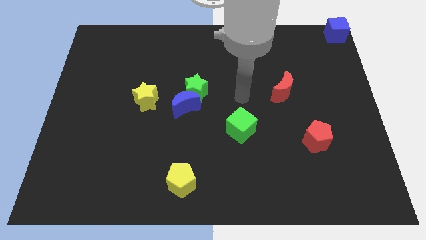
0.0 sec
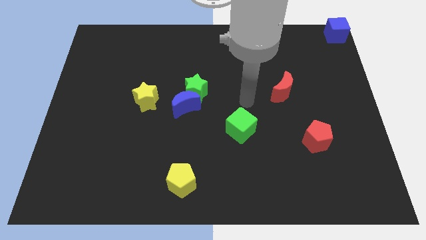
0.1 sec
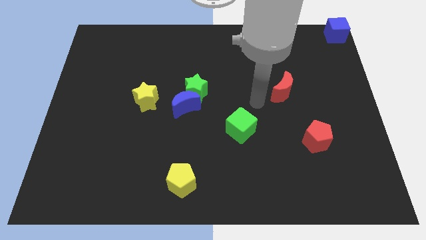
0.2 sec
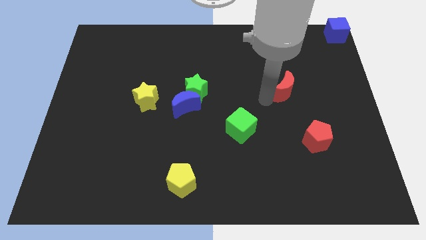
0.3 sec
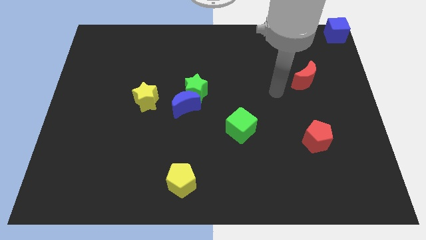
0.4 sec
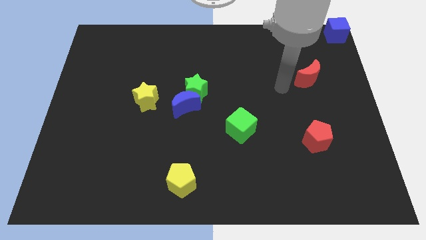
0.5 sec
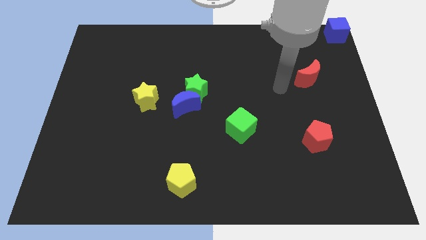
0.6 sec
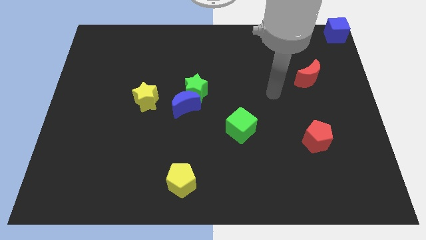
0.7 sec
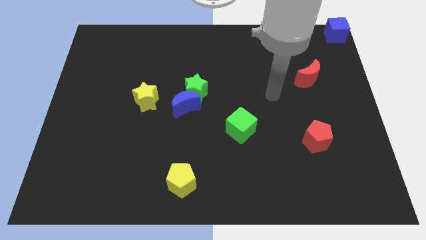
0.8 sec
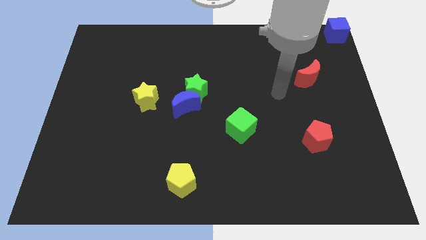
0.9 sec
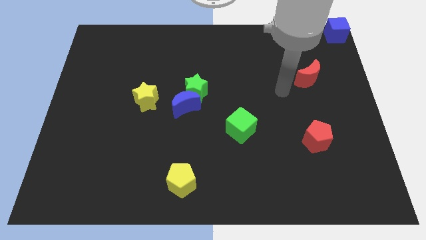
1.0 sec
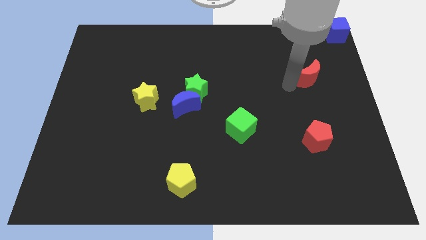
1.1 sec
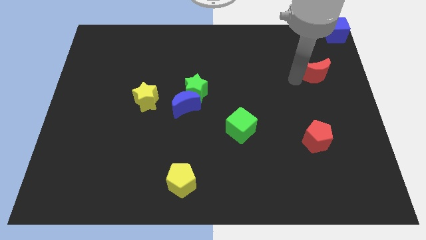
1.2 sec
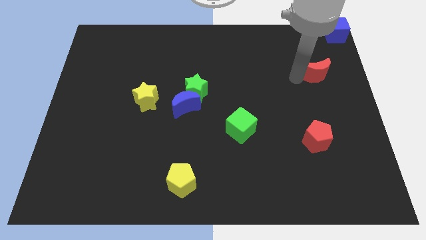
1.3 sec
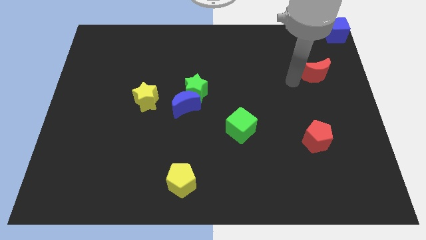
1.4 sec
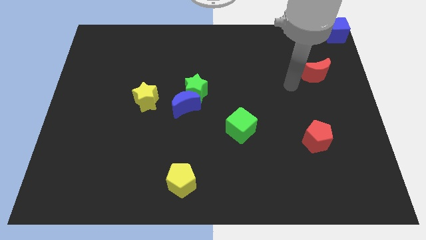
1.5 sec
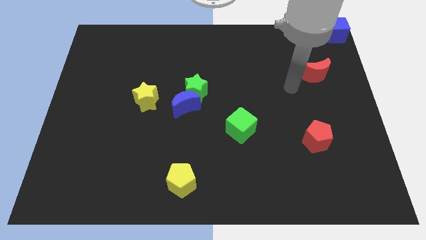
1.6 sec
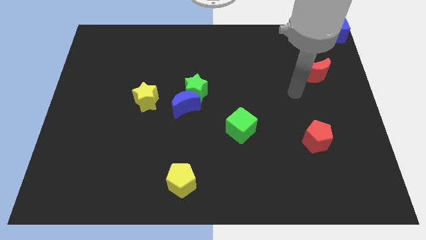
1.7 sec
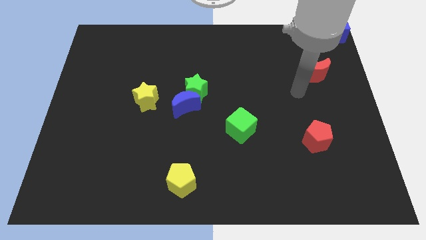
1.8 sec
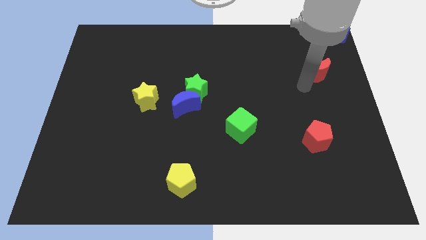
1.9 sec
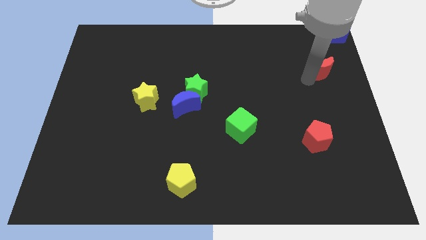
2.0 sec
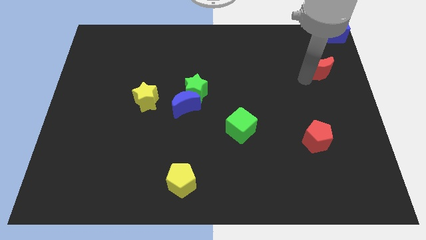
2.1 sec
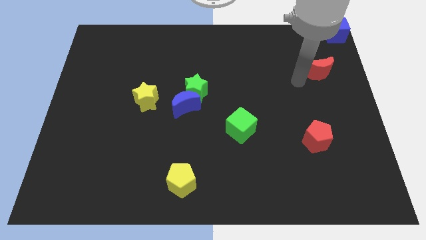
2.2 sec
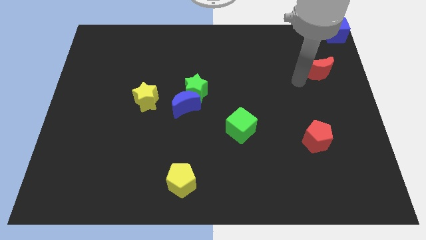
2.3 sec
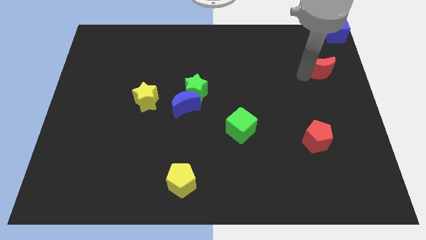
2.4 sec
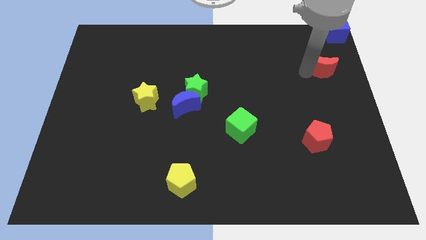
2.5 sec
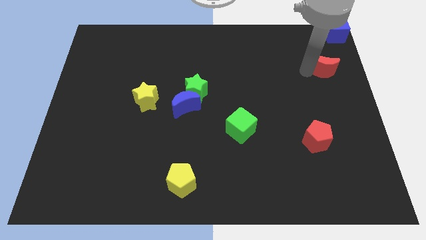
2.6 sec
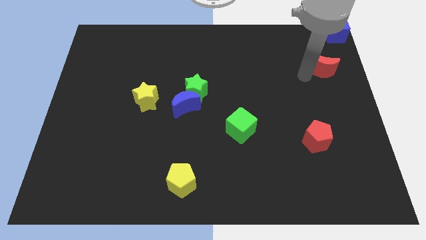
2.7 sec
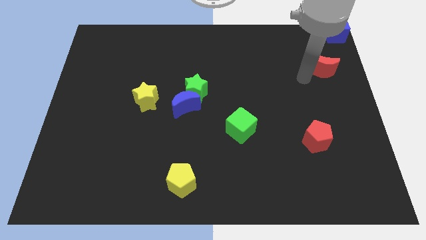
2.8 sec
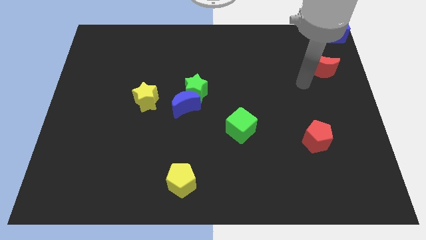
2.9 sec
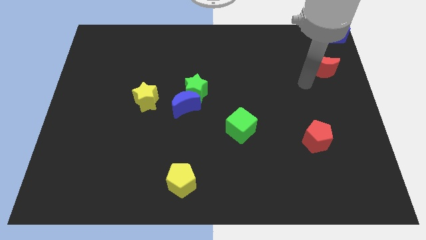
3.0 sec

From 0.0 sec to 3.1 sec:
move the red crescent above the red pentagon at the right

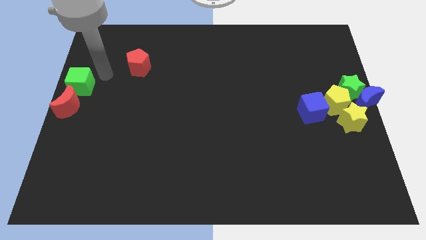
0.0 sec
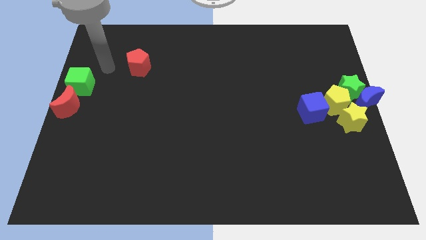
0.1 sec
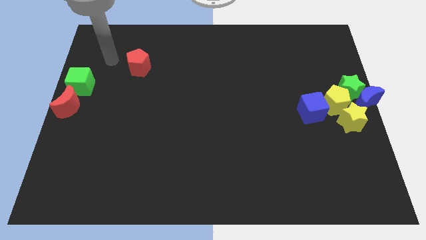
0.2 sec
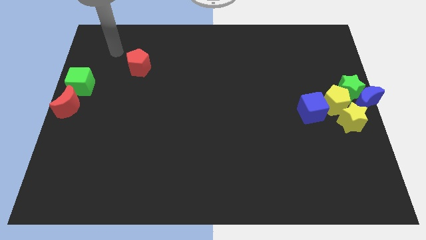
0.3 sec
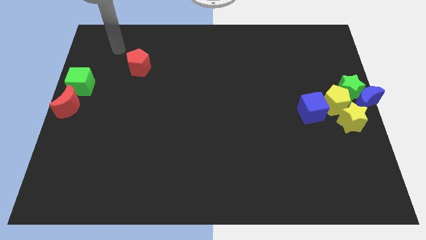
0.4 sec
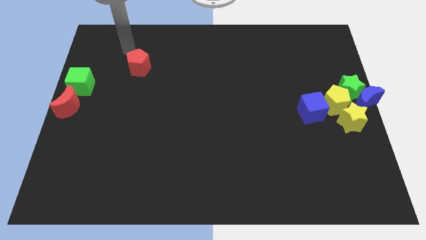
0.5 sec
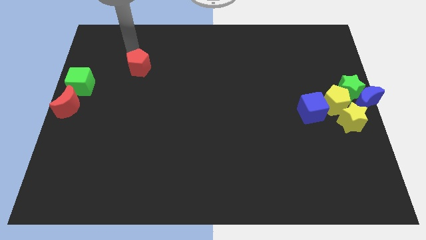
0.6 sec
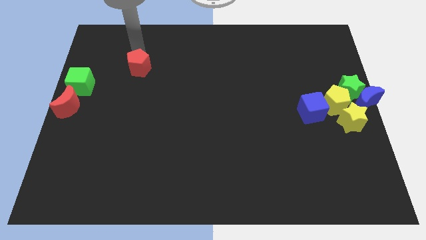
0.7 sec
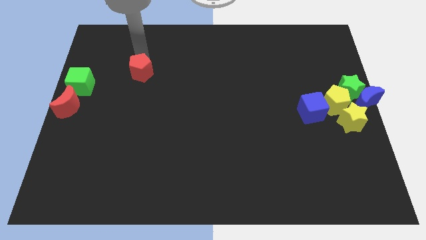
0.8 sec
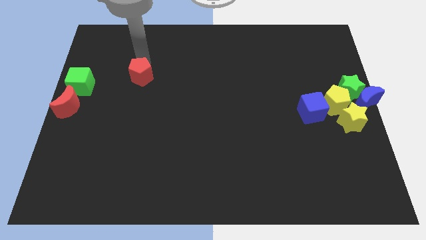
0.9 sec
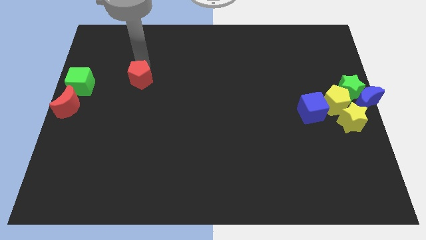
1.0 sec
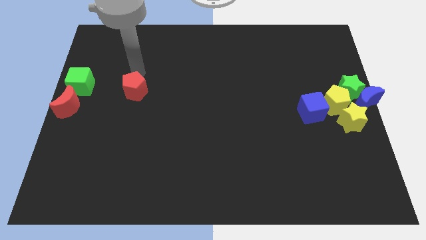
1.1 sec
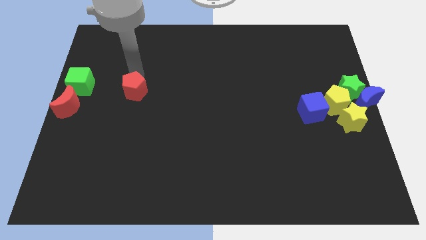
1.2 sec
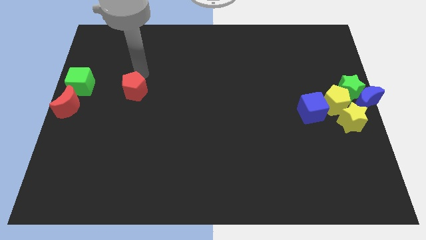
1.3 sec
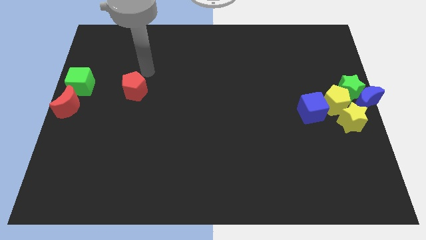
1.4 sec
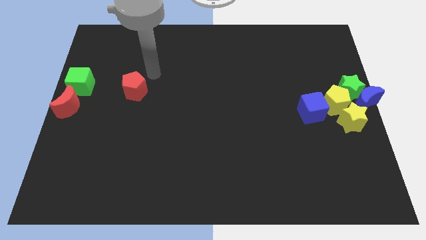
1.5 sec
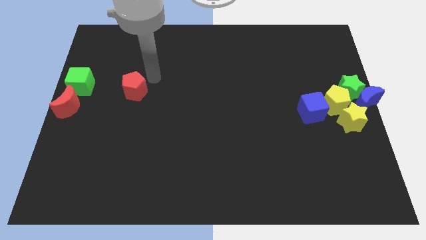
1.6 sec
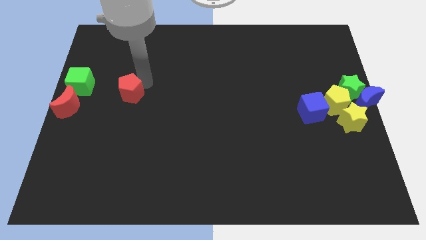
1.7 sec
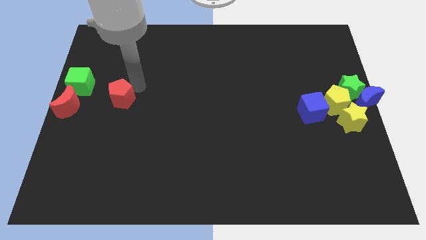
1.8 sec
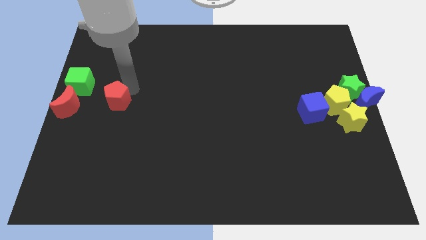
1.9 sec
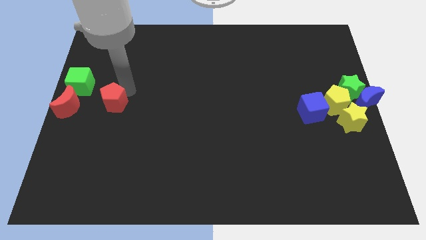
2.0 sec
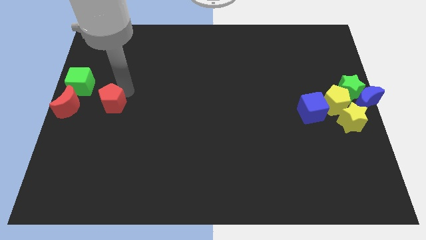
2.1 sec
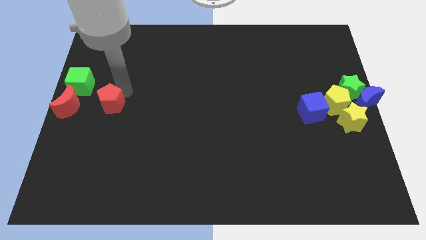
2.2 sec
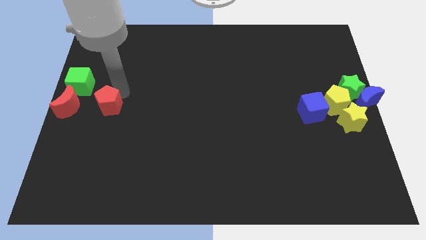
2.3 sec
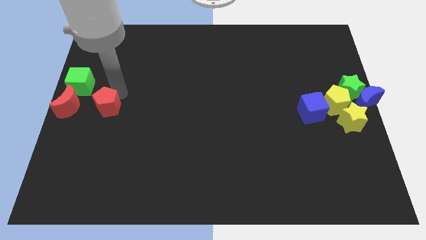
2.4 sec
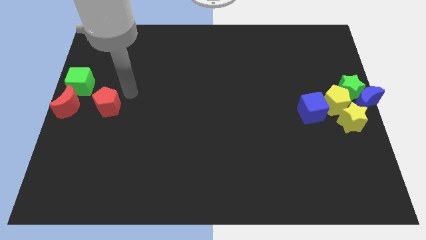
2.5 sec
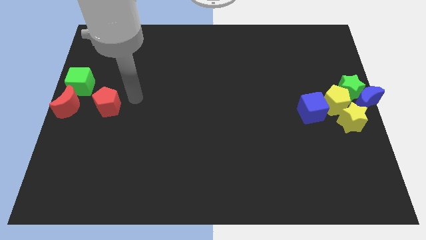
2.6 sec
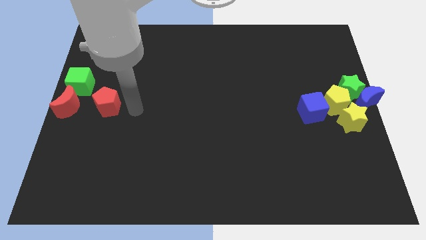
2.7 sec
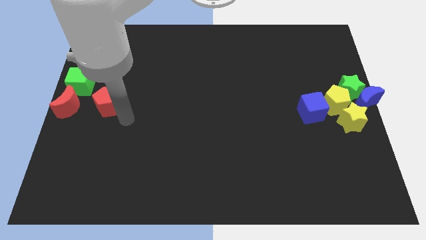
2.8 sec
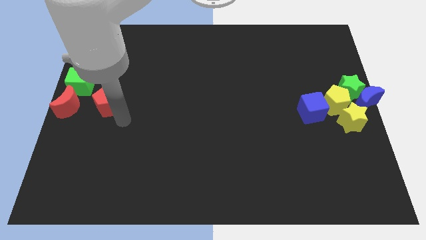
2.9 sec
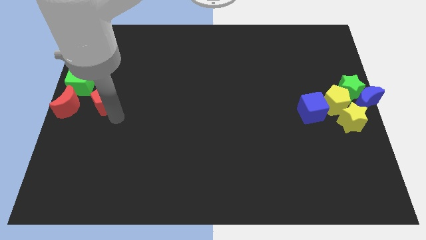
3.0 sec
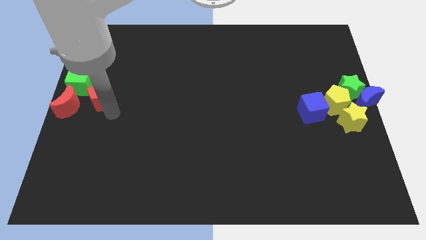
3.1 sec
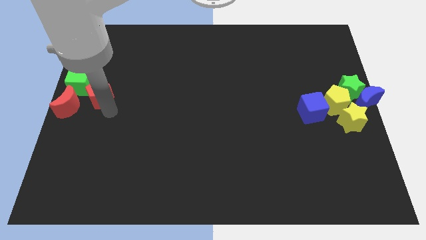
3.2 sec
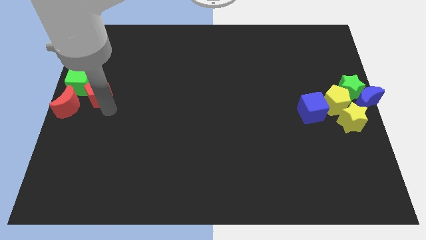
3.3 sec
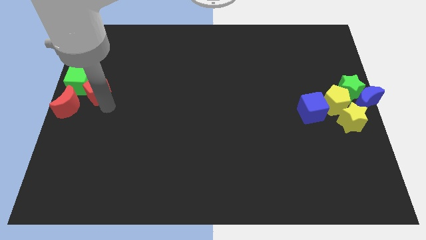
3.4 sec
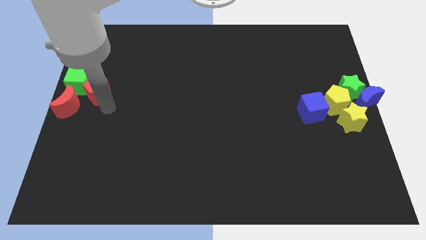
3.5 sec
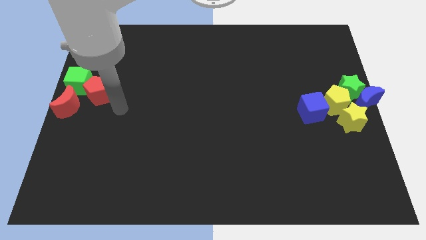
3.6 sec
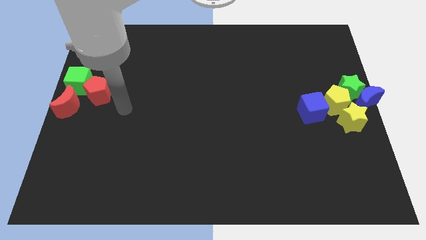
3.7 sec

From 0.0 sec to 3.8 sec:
move red pentagon beside green cube

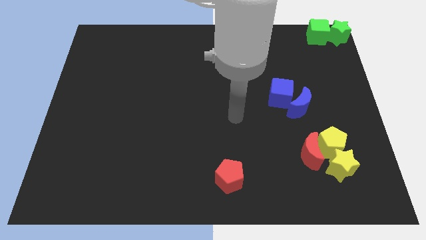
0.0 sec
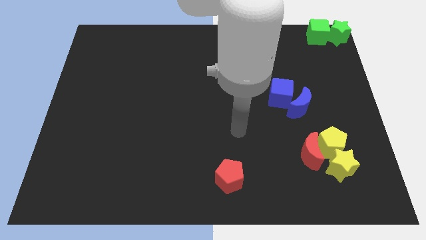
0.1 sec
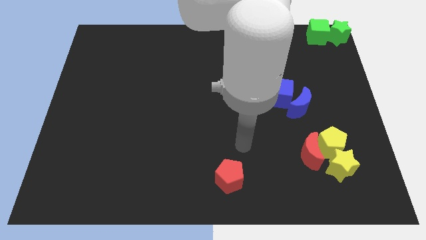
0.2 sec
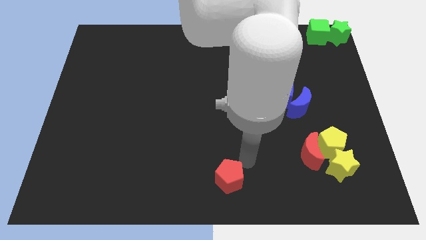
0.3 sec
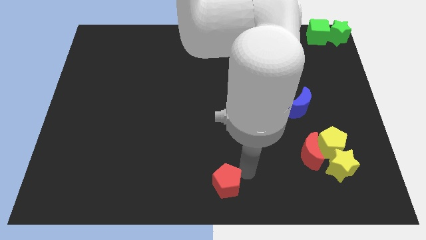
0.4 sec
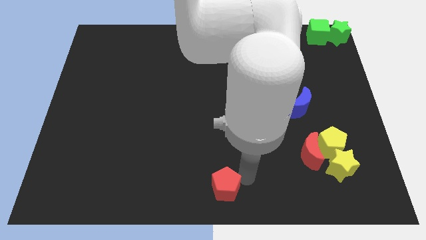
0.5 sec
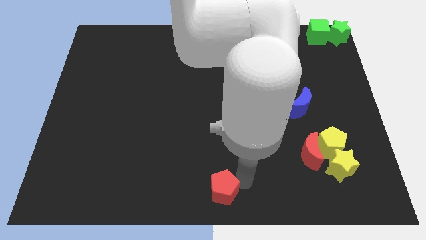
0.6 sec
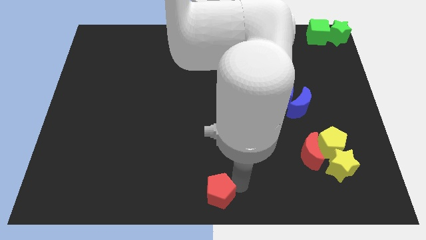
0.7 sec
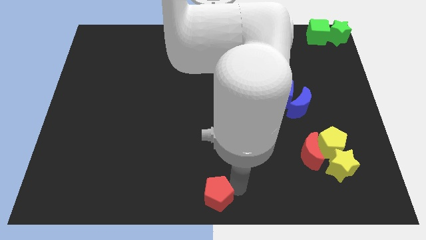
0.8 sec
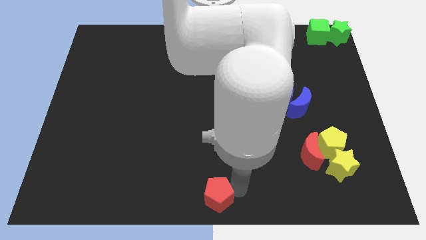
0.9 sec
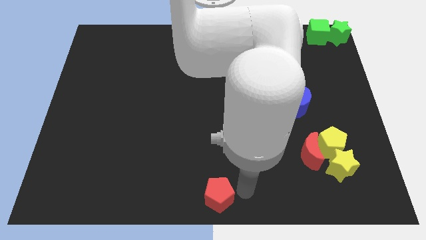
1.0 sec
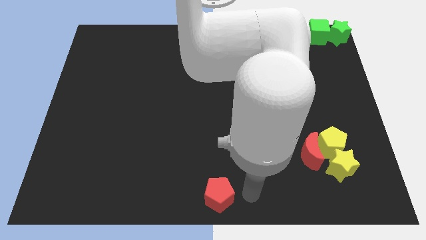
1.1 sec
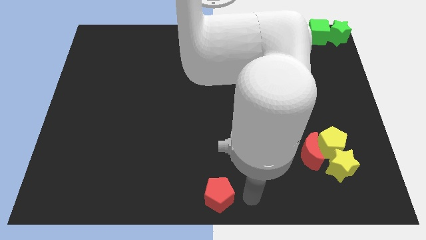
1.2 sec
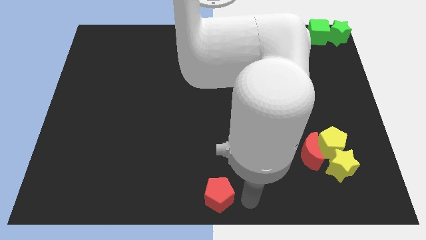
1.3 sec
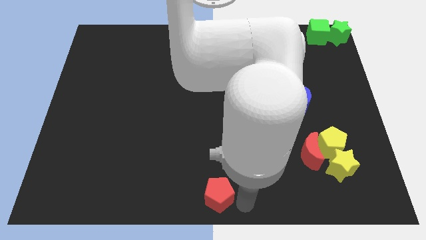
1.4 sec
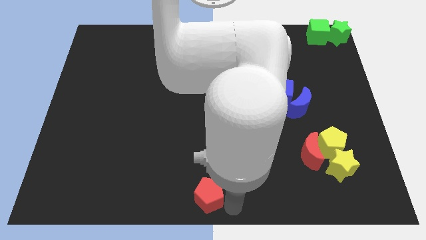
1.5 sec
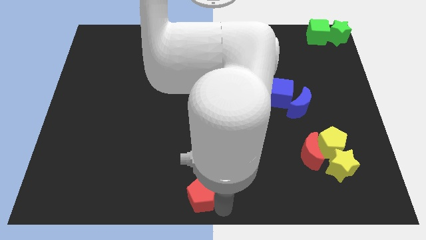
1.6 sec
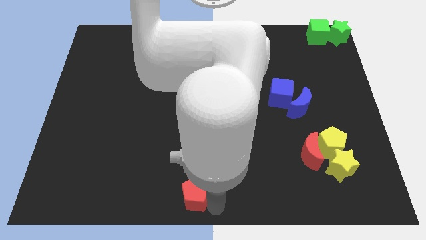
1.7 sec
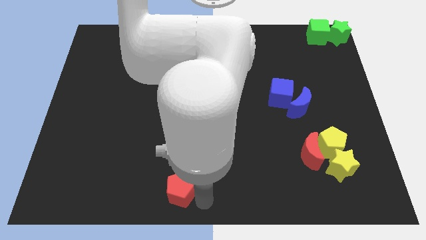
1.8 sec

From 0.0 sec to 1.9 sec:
push the red pentagon slightly to the bottom left

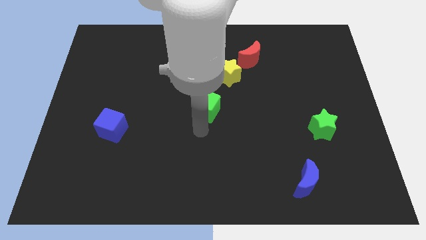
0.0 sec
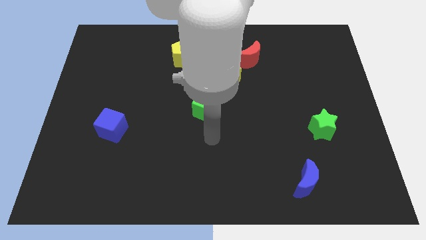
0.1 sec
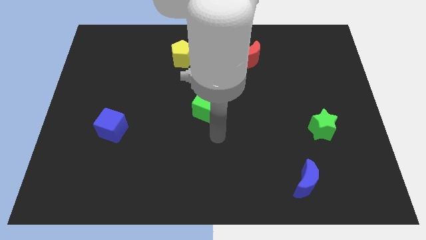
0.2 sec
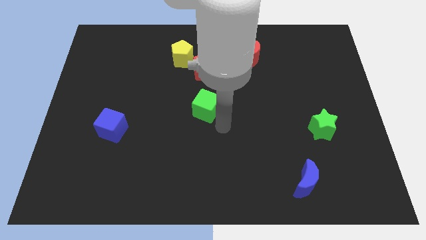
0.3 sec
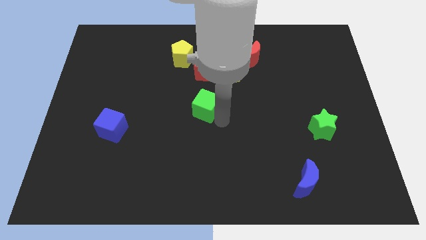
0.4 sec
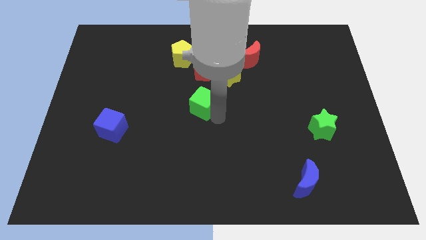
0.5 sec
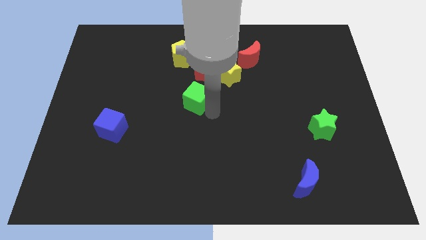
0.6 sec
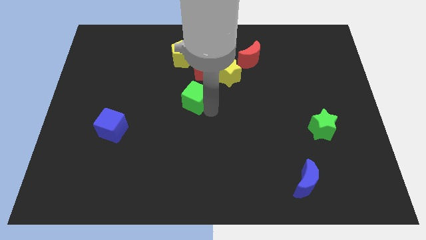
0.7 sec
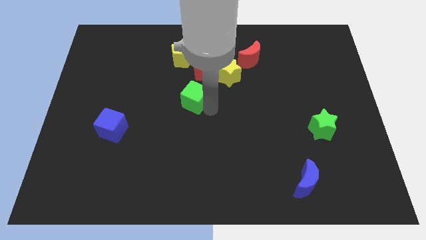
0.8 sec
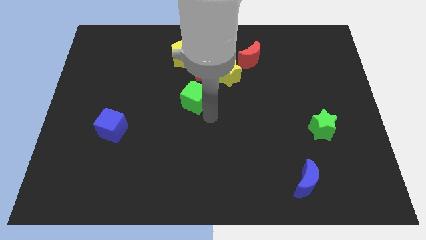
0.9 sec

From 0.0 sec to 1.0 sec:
put the green cube below the red pentagon
